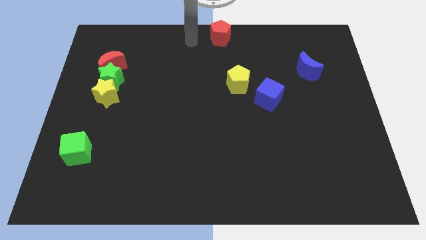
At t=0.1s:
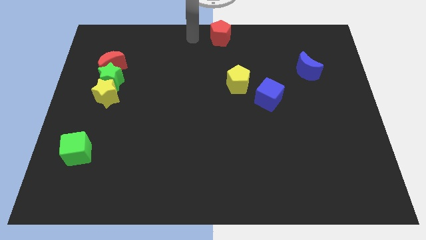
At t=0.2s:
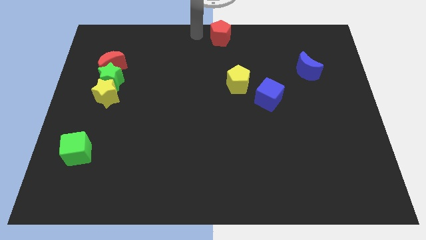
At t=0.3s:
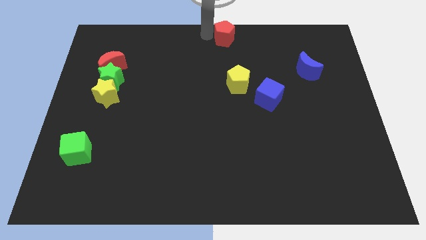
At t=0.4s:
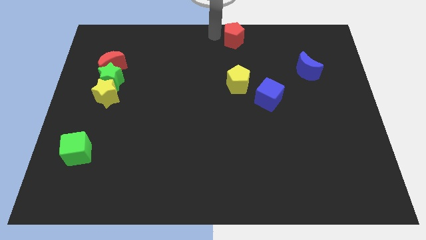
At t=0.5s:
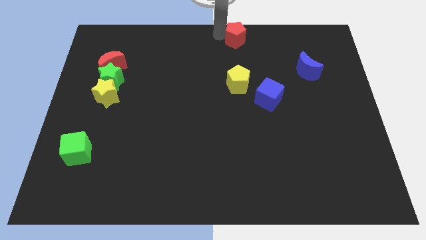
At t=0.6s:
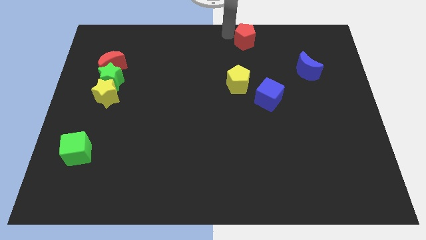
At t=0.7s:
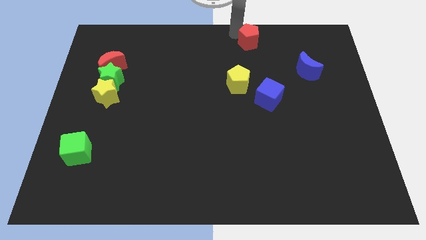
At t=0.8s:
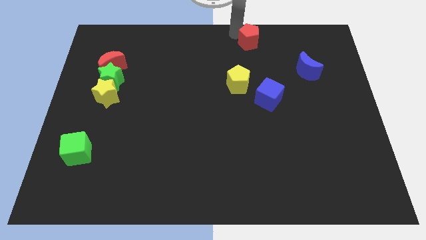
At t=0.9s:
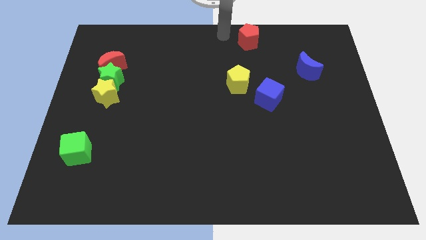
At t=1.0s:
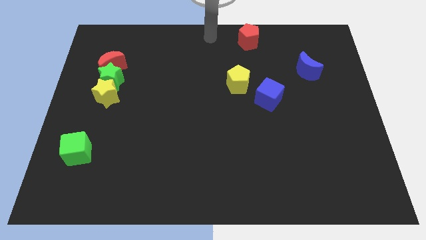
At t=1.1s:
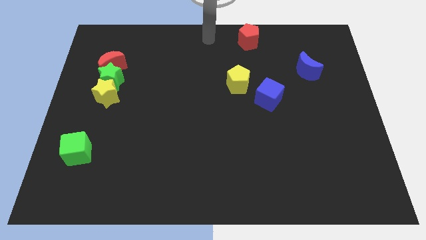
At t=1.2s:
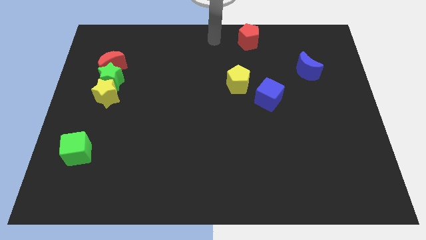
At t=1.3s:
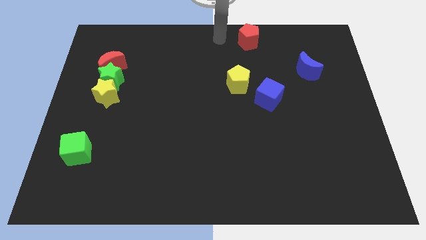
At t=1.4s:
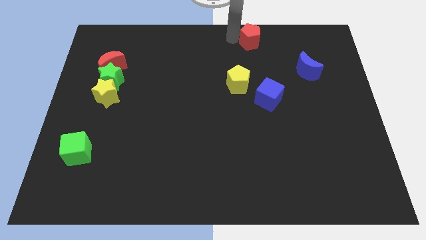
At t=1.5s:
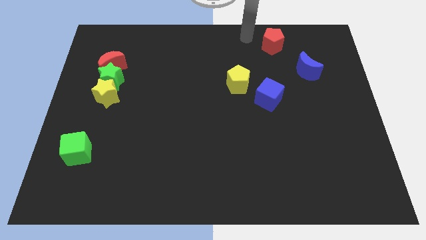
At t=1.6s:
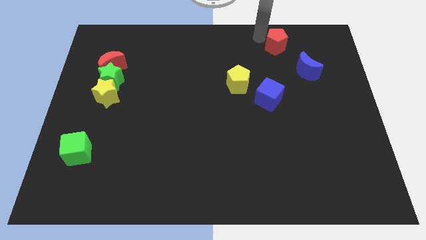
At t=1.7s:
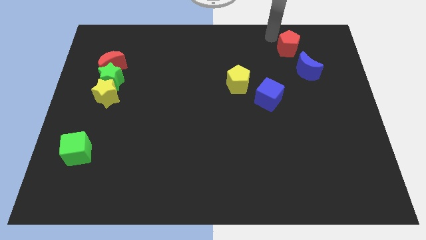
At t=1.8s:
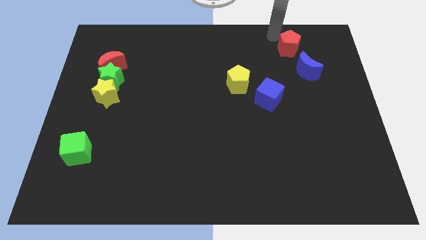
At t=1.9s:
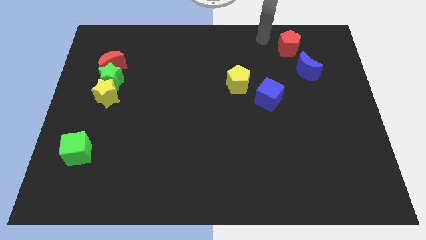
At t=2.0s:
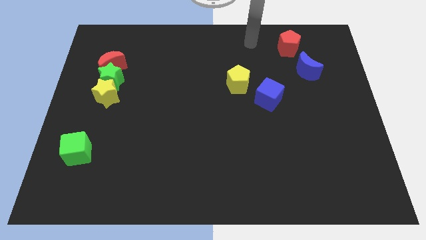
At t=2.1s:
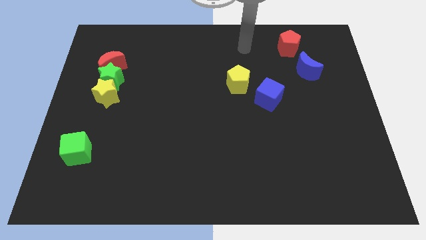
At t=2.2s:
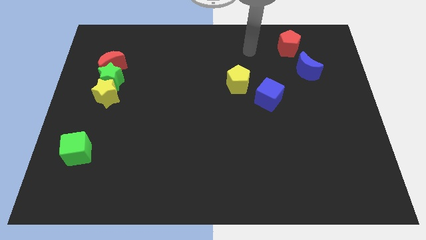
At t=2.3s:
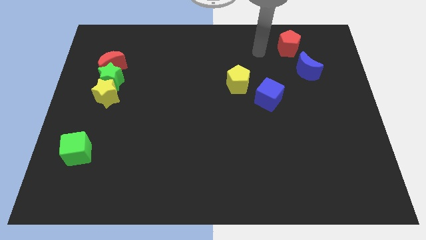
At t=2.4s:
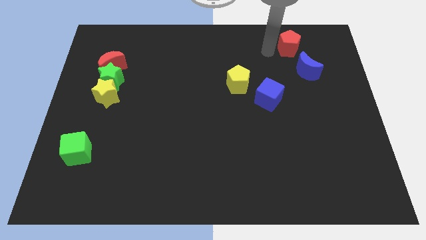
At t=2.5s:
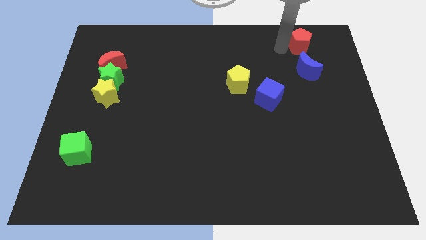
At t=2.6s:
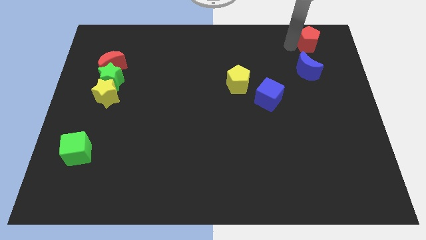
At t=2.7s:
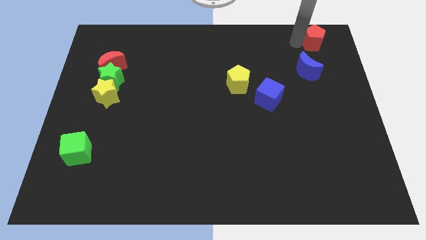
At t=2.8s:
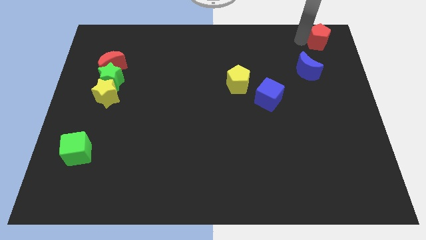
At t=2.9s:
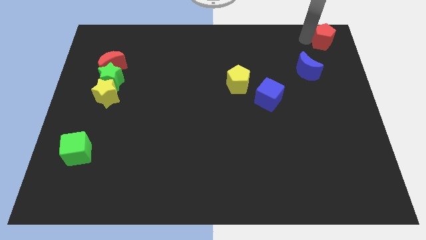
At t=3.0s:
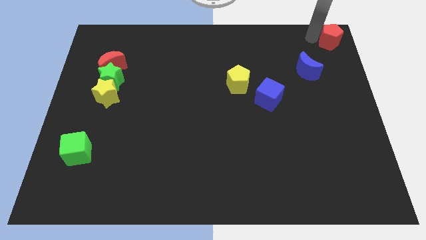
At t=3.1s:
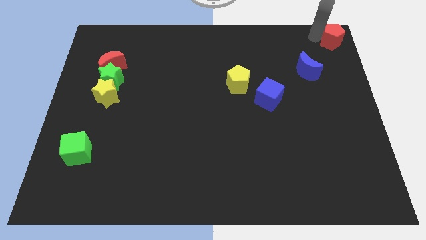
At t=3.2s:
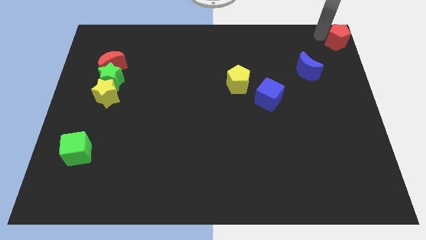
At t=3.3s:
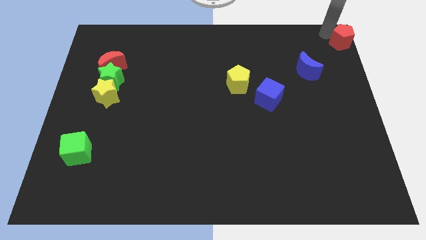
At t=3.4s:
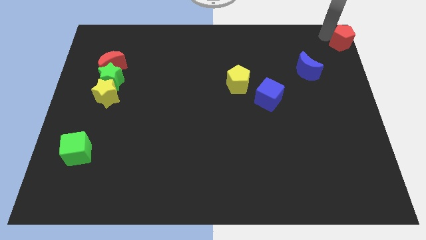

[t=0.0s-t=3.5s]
slide red pentagon to top right corner

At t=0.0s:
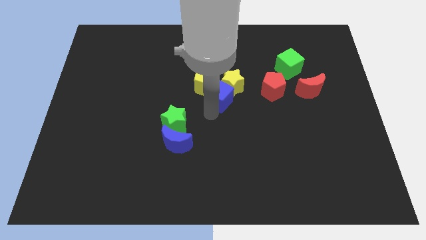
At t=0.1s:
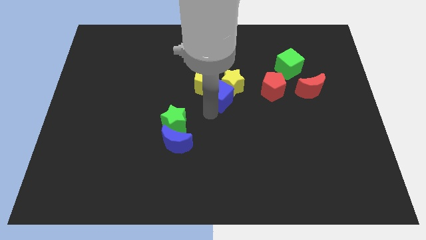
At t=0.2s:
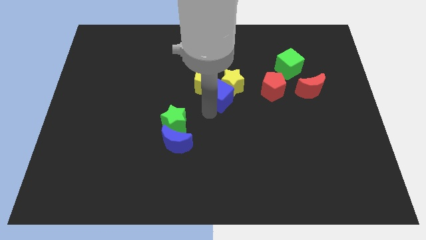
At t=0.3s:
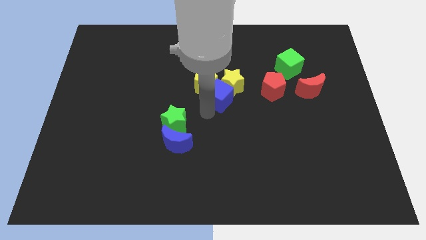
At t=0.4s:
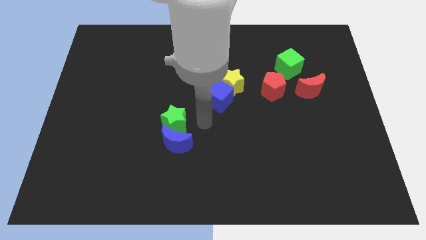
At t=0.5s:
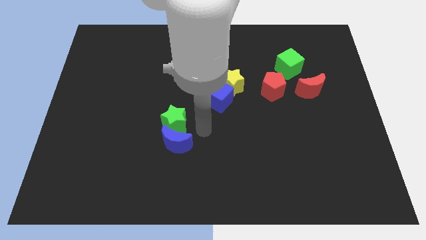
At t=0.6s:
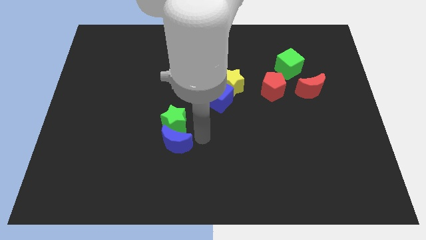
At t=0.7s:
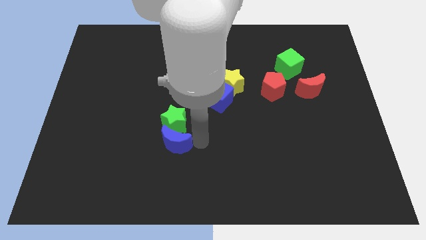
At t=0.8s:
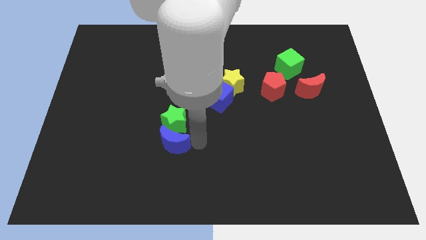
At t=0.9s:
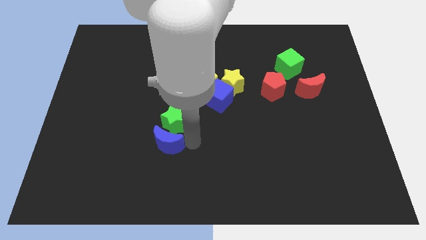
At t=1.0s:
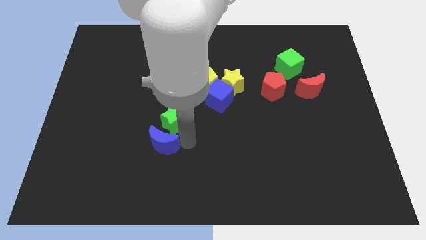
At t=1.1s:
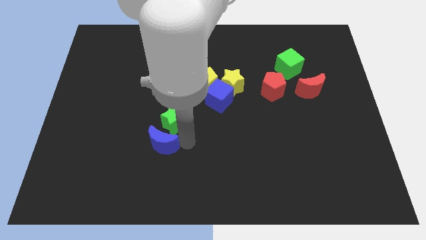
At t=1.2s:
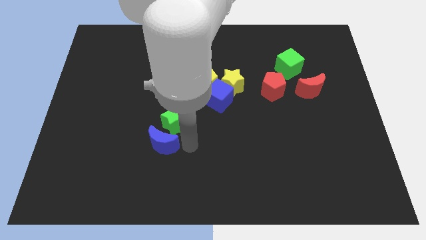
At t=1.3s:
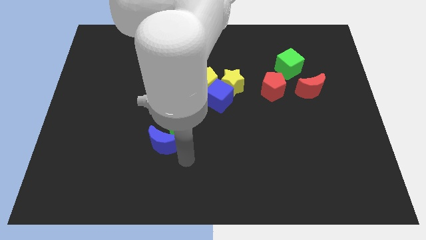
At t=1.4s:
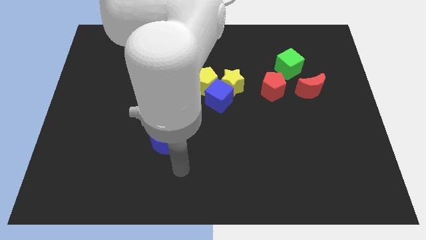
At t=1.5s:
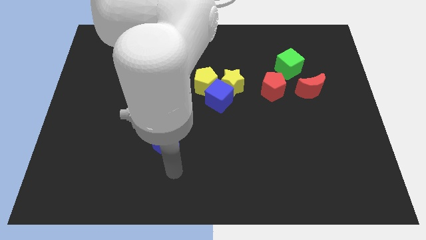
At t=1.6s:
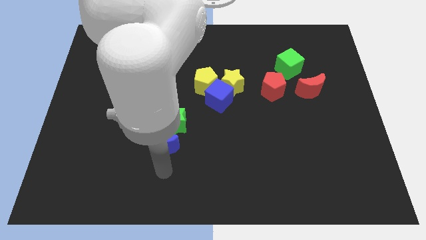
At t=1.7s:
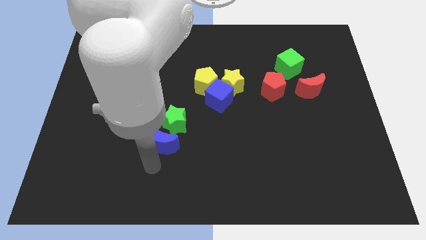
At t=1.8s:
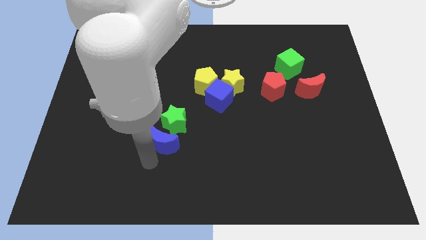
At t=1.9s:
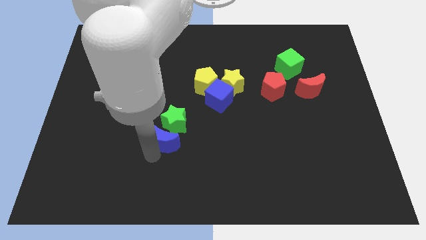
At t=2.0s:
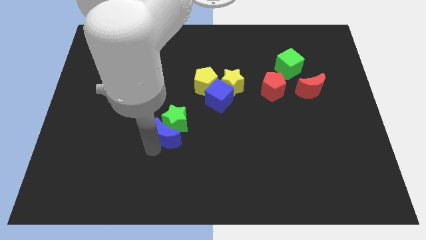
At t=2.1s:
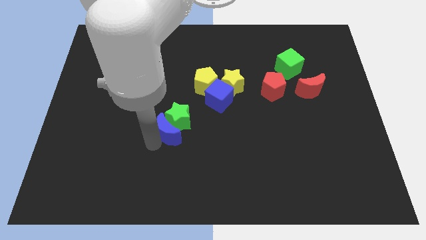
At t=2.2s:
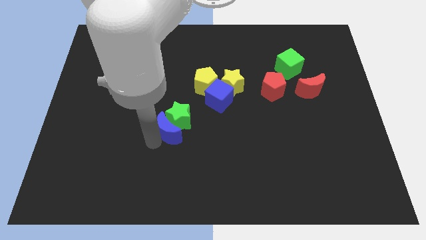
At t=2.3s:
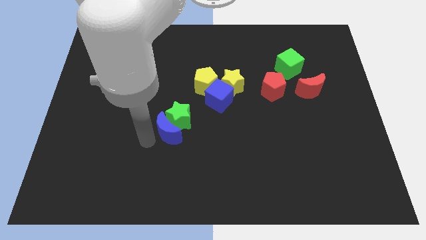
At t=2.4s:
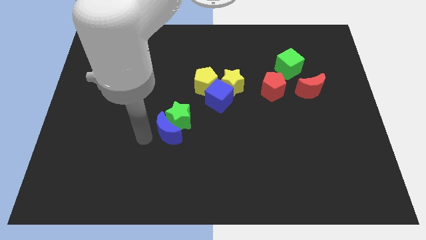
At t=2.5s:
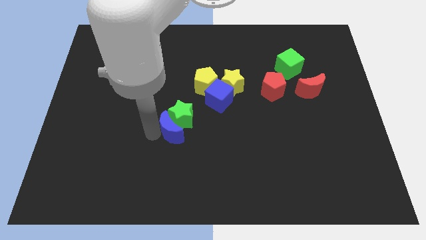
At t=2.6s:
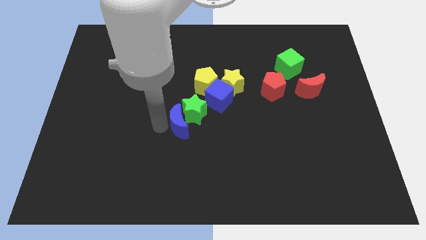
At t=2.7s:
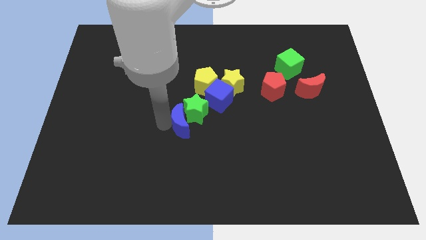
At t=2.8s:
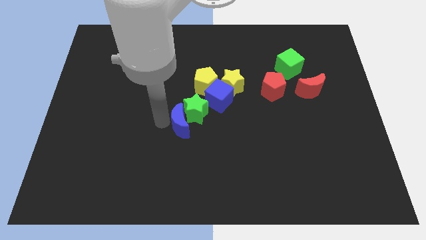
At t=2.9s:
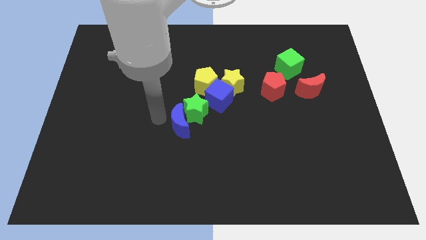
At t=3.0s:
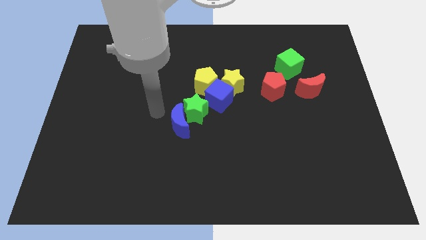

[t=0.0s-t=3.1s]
move the arm away from the blue cube

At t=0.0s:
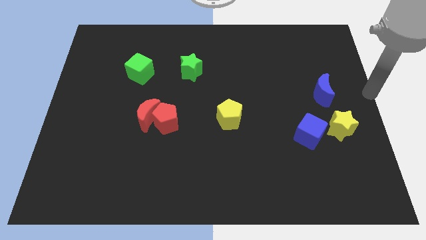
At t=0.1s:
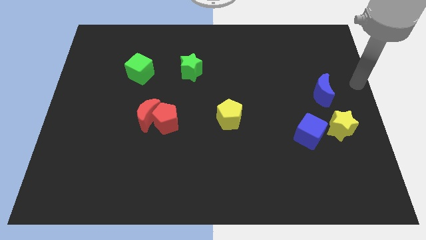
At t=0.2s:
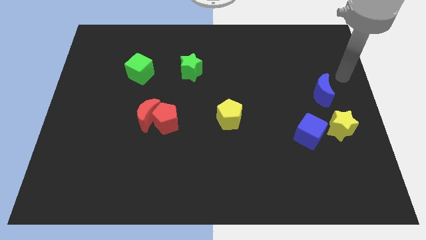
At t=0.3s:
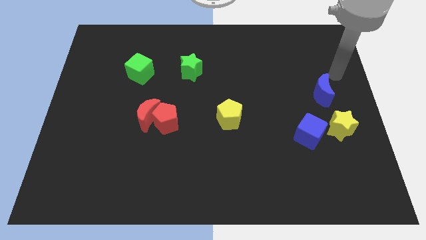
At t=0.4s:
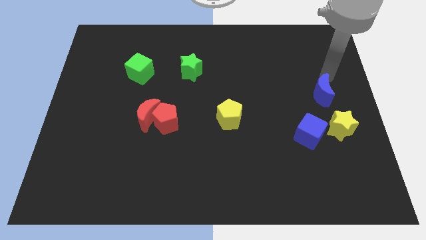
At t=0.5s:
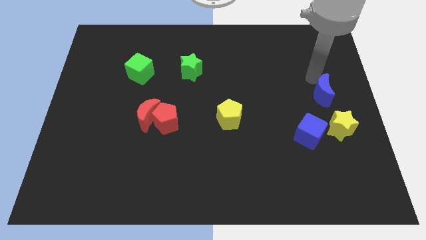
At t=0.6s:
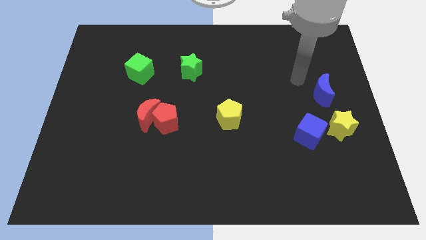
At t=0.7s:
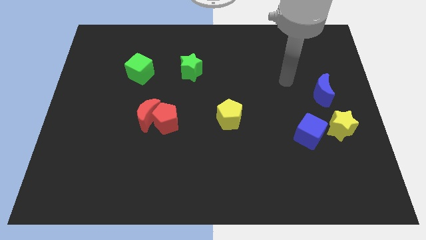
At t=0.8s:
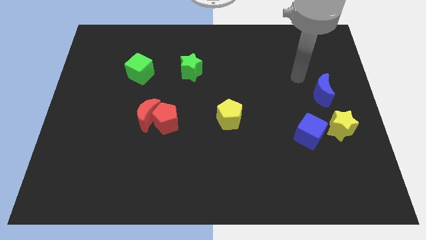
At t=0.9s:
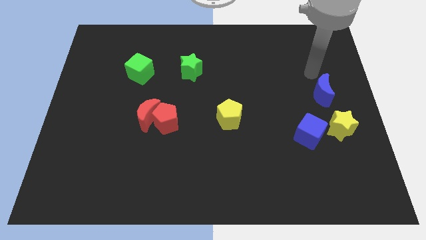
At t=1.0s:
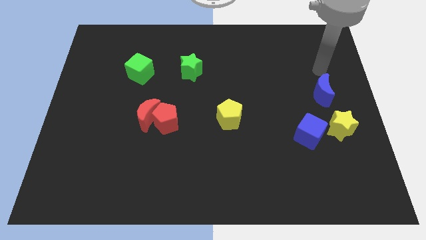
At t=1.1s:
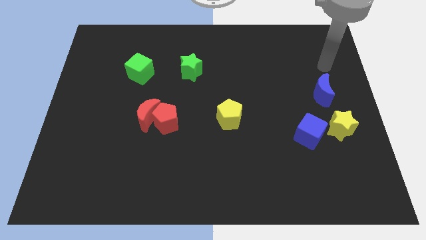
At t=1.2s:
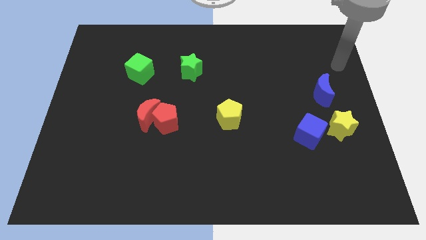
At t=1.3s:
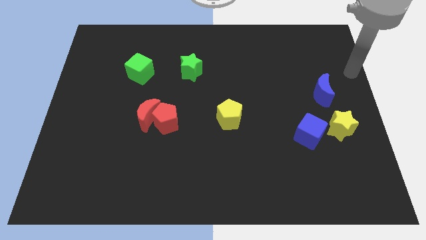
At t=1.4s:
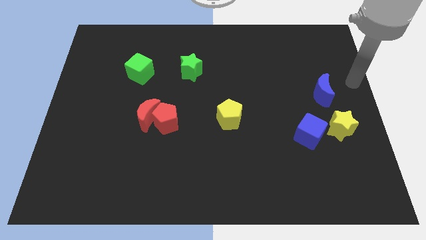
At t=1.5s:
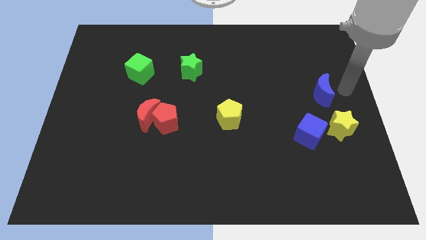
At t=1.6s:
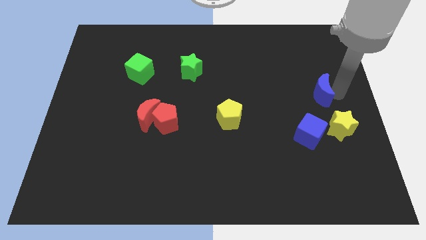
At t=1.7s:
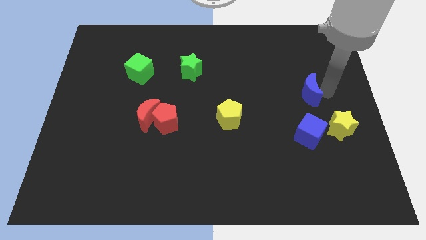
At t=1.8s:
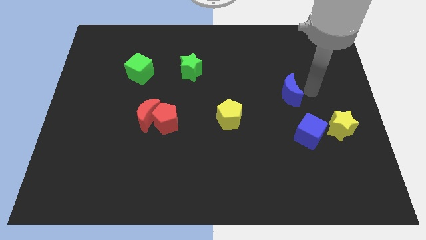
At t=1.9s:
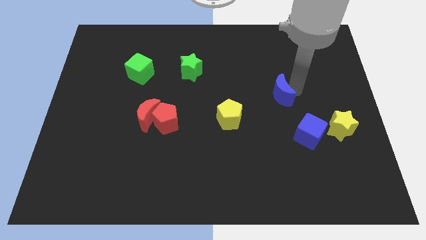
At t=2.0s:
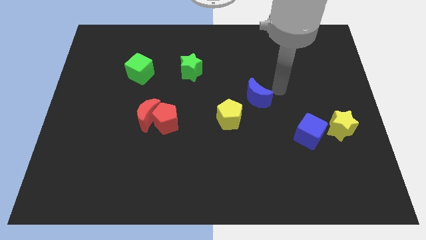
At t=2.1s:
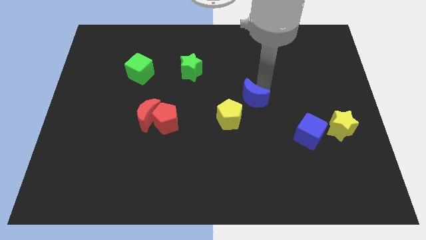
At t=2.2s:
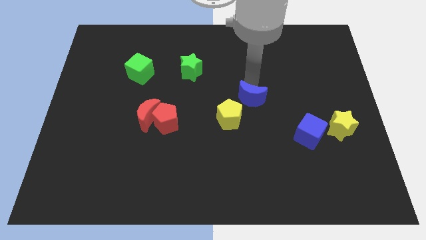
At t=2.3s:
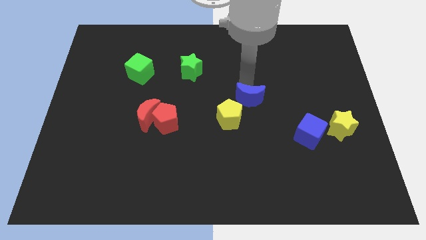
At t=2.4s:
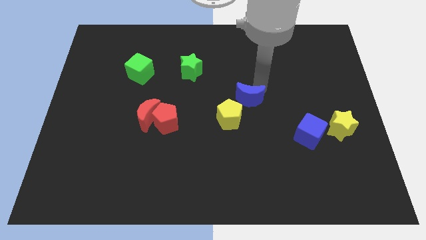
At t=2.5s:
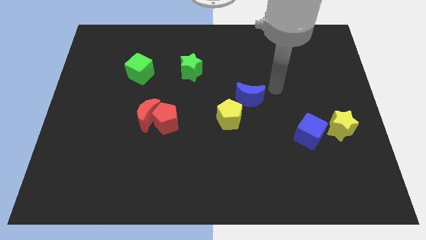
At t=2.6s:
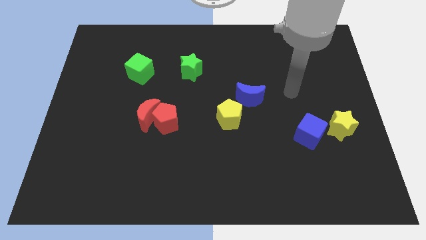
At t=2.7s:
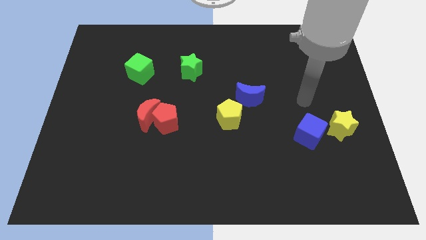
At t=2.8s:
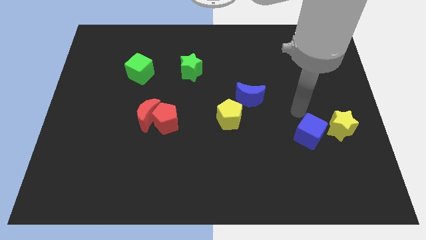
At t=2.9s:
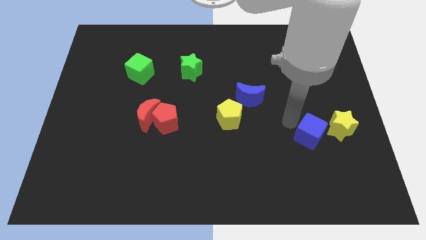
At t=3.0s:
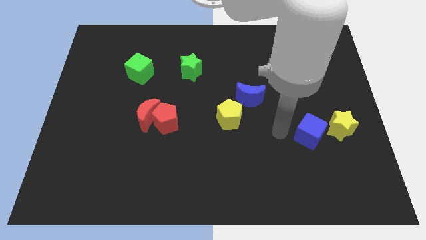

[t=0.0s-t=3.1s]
push blue moon towards yellow pentagon
